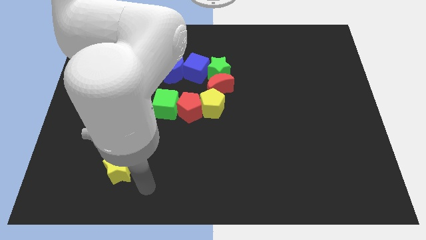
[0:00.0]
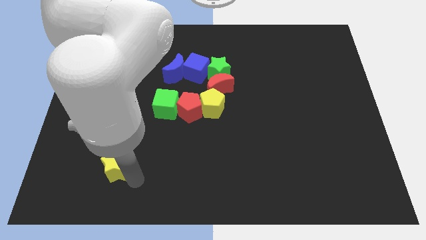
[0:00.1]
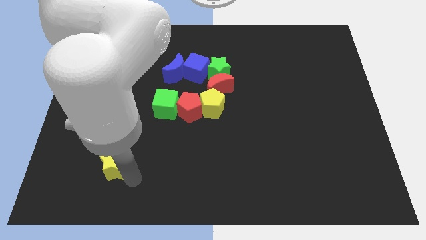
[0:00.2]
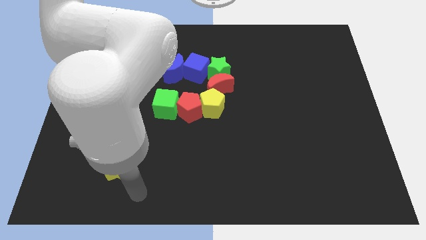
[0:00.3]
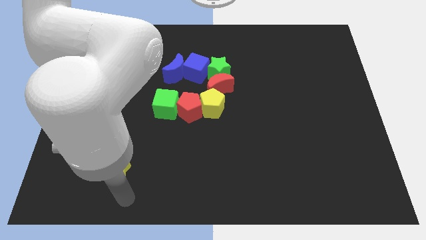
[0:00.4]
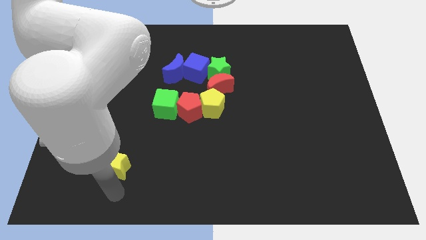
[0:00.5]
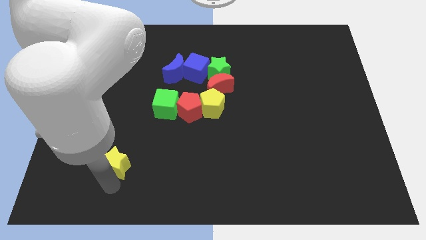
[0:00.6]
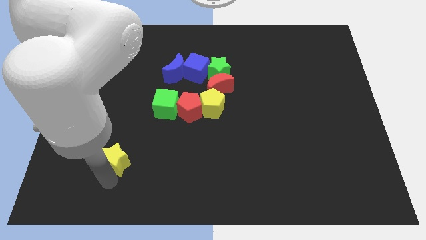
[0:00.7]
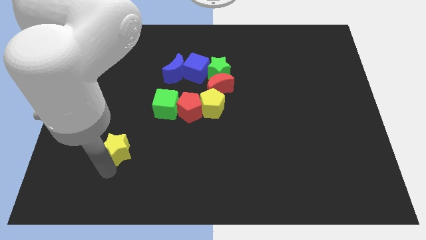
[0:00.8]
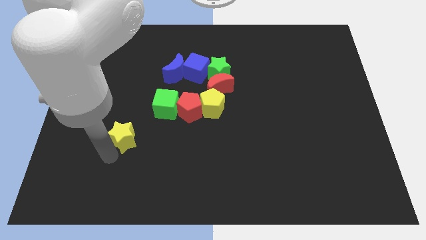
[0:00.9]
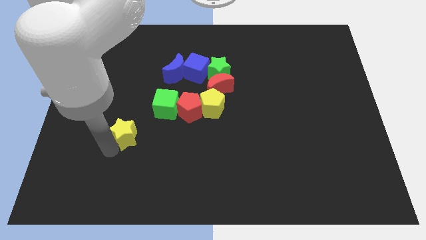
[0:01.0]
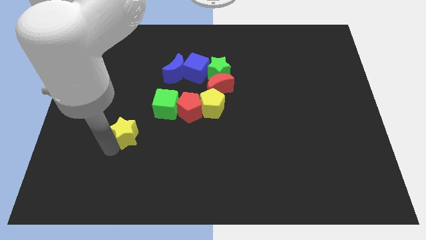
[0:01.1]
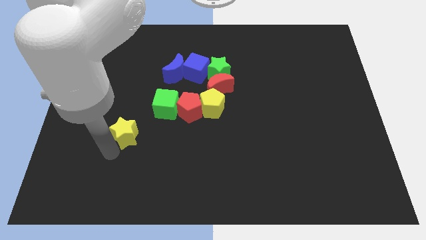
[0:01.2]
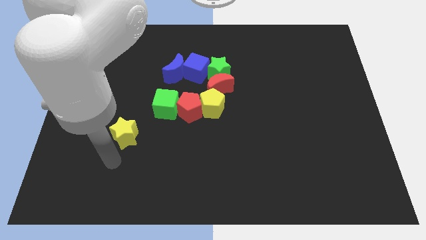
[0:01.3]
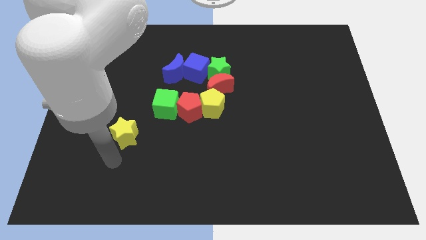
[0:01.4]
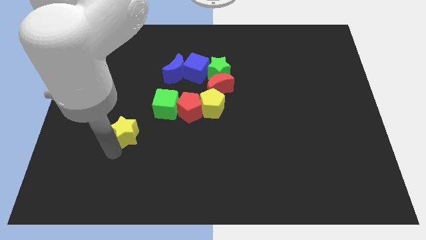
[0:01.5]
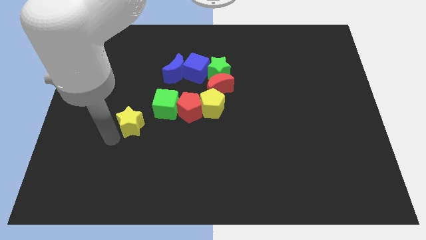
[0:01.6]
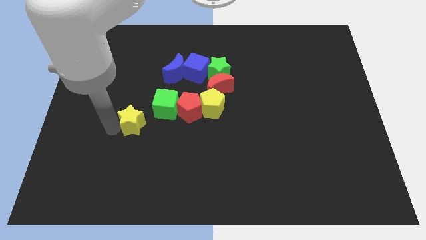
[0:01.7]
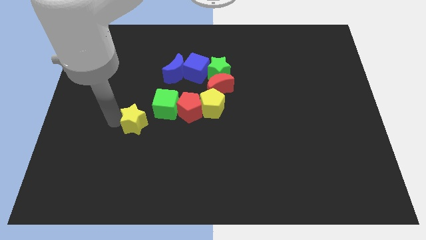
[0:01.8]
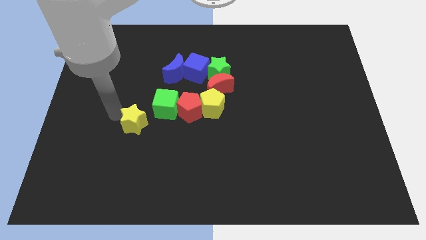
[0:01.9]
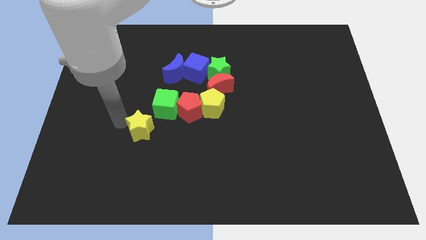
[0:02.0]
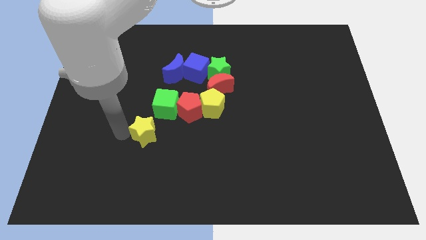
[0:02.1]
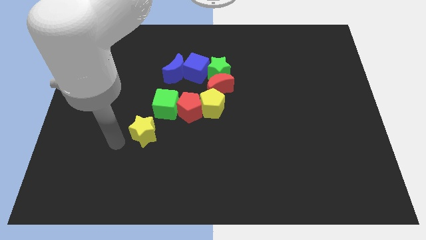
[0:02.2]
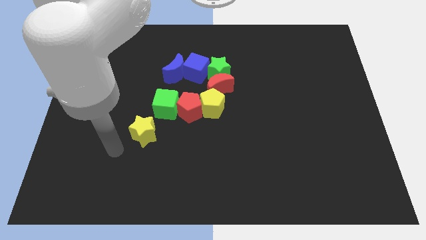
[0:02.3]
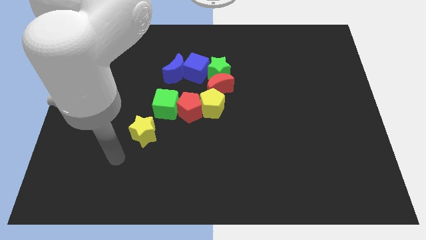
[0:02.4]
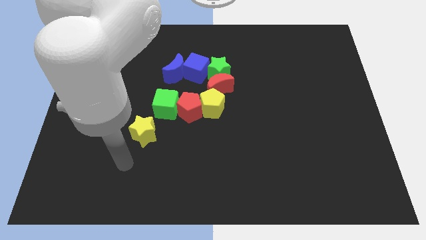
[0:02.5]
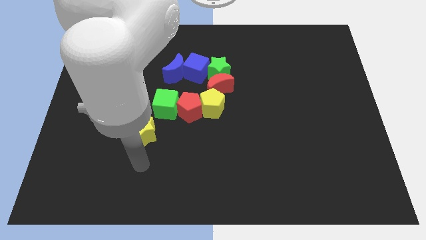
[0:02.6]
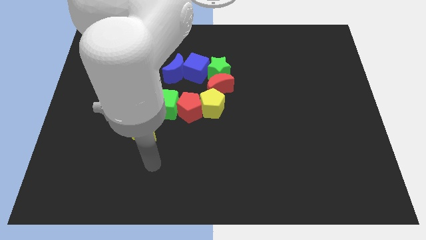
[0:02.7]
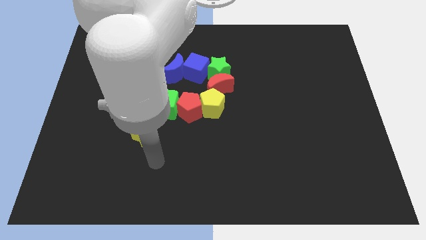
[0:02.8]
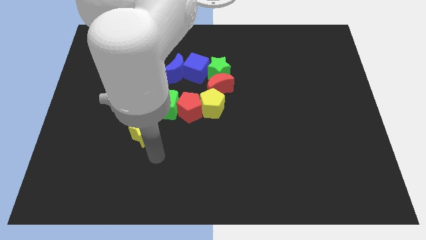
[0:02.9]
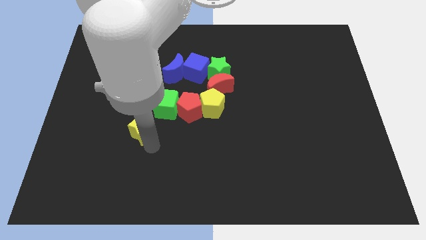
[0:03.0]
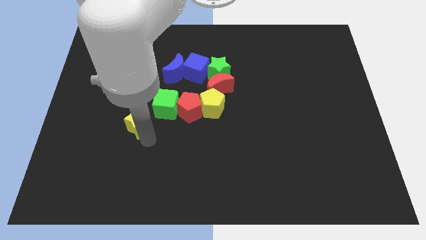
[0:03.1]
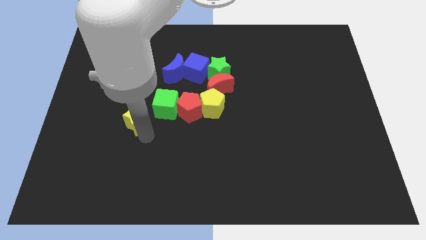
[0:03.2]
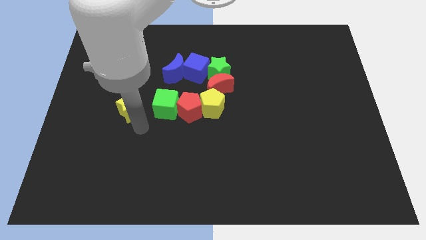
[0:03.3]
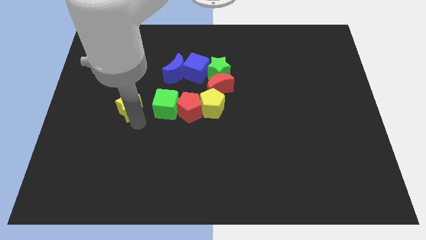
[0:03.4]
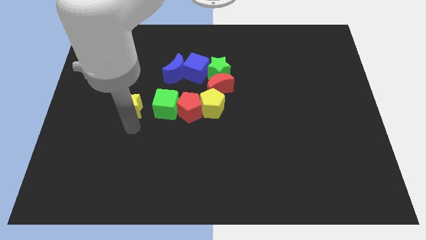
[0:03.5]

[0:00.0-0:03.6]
place the yellow star to the left side of the green cube

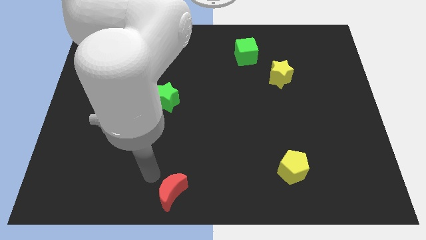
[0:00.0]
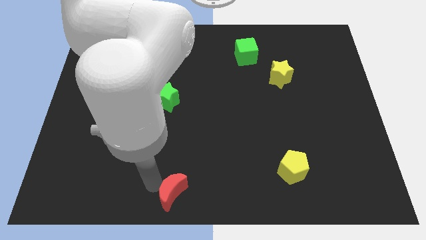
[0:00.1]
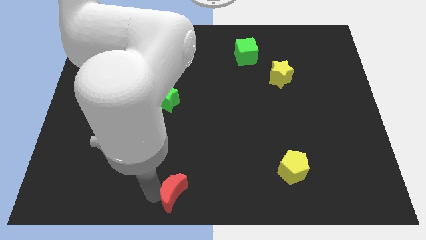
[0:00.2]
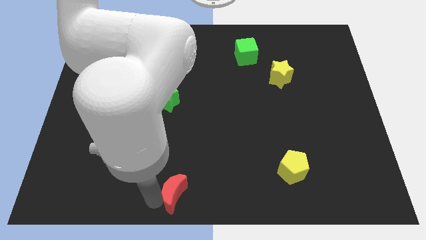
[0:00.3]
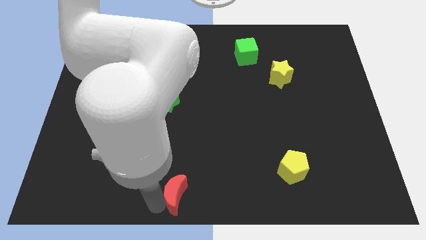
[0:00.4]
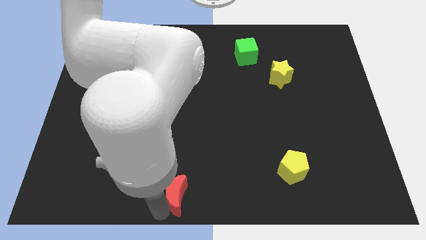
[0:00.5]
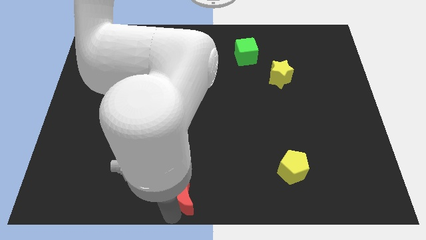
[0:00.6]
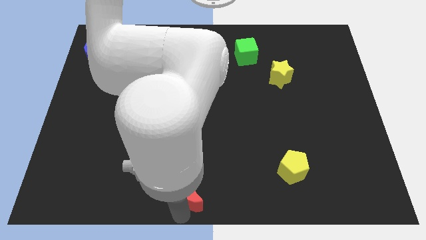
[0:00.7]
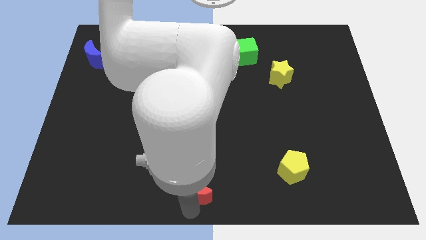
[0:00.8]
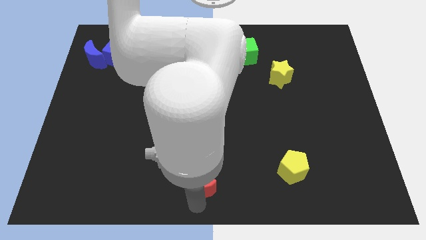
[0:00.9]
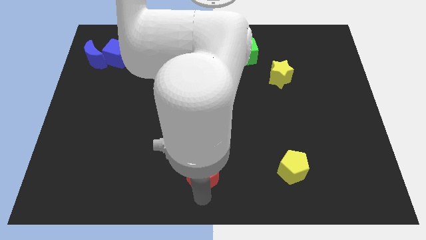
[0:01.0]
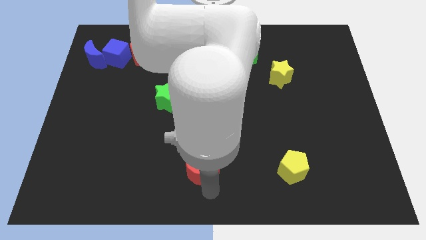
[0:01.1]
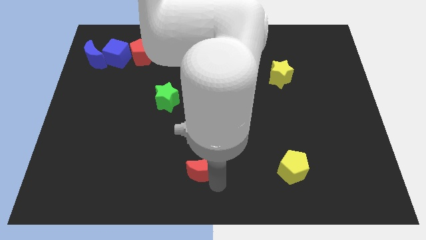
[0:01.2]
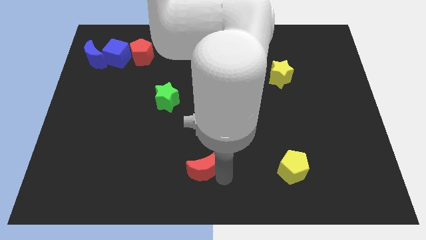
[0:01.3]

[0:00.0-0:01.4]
push the red moon horizontally to the right side of the yellow pentagon

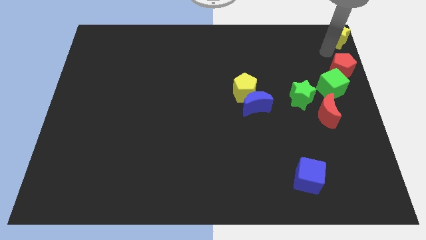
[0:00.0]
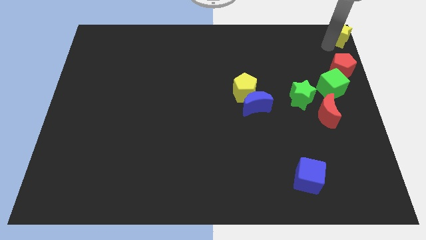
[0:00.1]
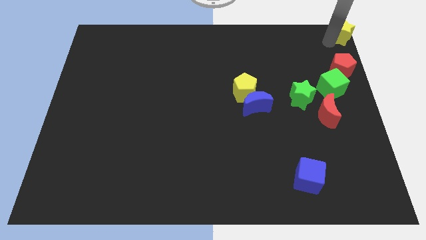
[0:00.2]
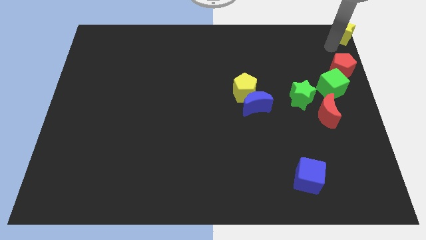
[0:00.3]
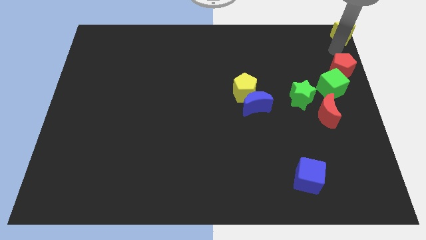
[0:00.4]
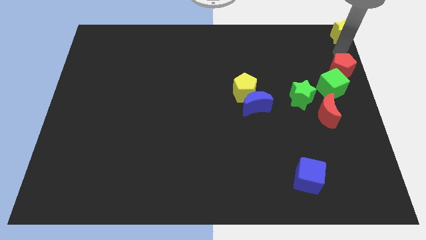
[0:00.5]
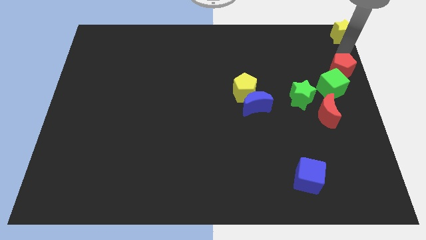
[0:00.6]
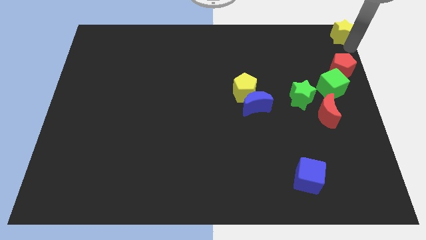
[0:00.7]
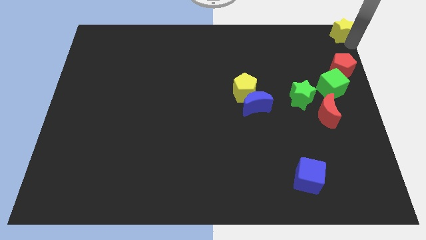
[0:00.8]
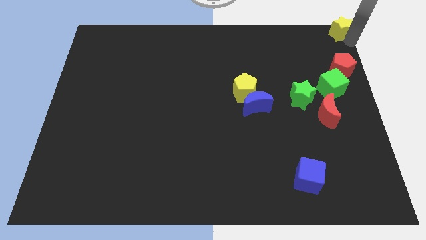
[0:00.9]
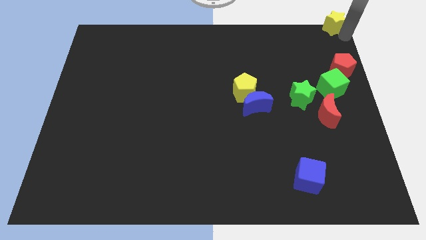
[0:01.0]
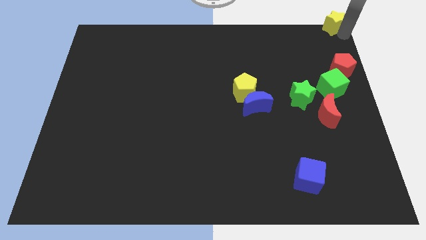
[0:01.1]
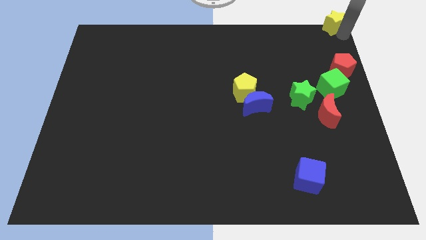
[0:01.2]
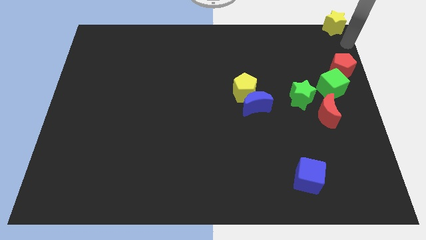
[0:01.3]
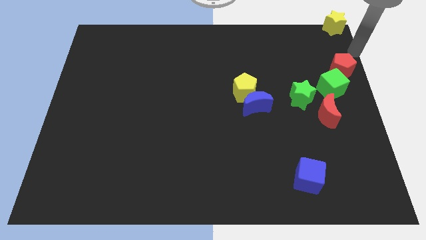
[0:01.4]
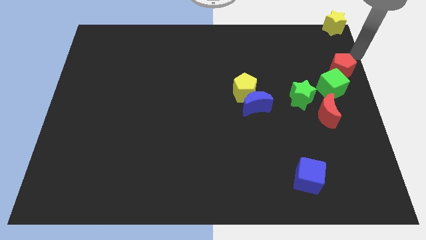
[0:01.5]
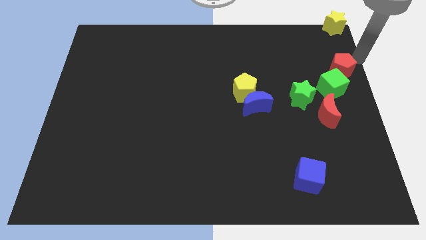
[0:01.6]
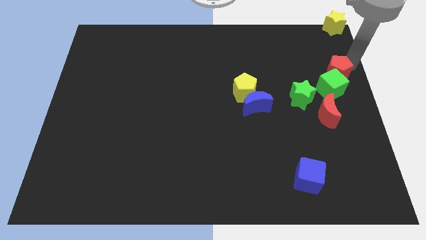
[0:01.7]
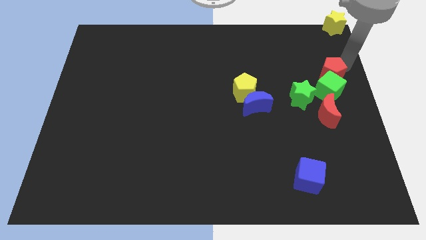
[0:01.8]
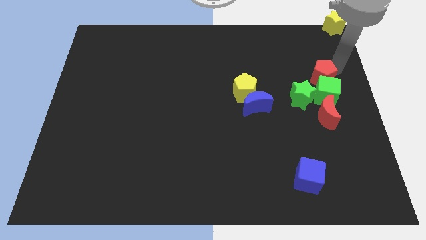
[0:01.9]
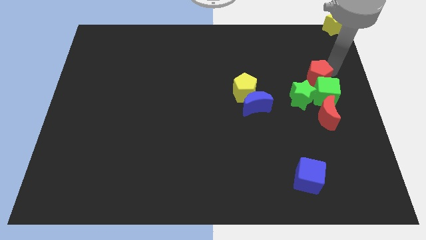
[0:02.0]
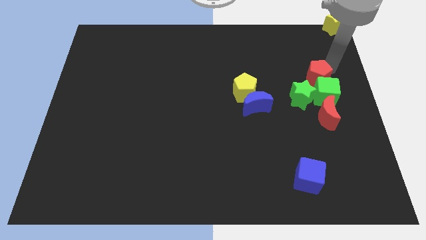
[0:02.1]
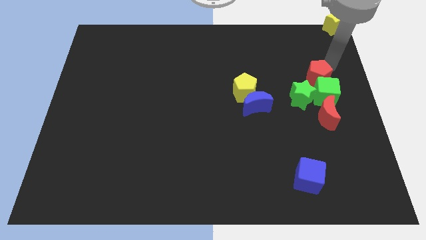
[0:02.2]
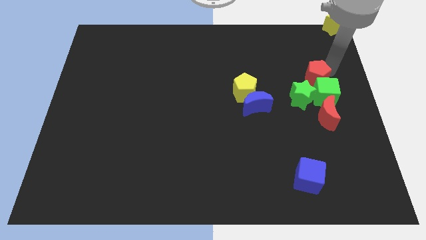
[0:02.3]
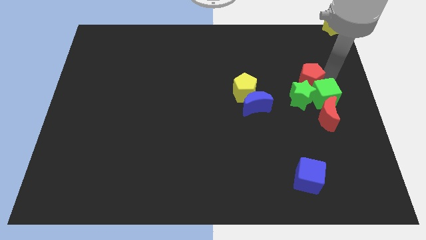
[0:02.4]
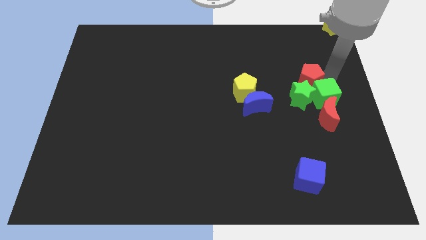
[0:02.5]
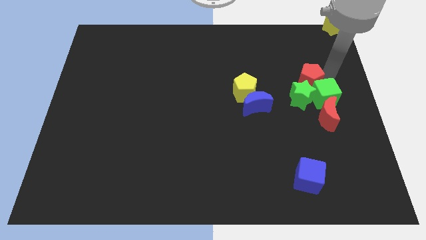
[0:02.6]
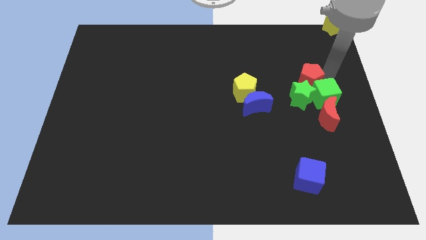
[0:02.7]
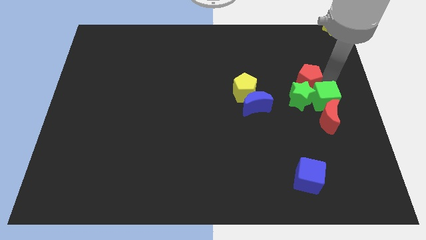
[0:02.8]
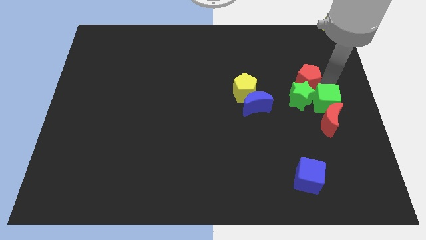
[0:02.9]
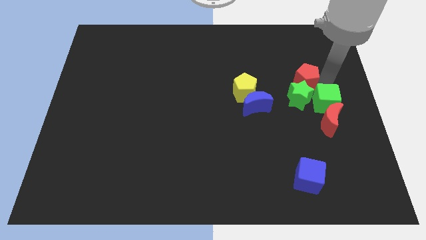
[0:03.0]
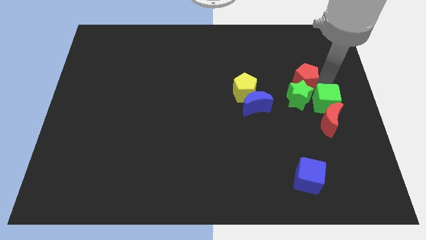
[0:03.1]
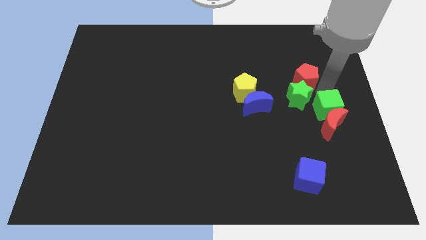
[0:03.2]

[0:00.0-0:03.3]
push red pentagon above green star

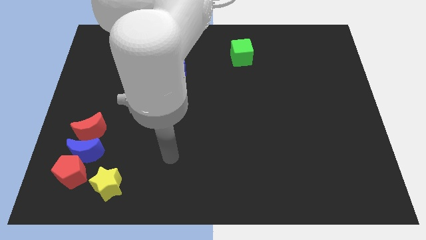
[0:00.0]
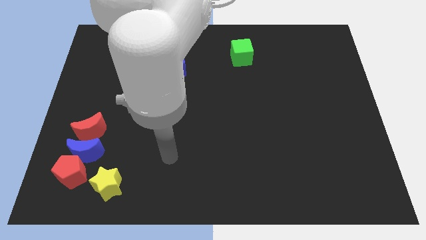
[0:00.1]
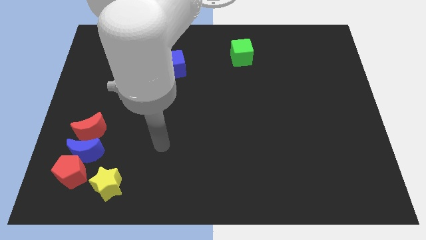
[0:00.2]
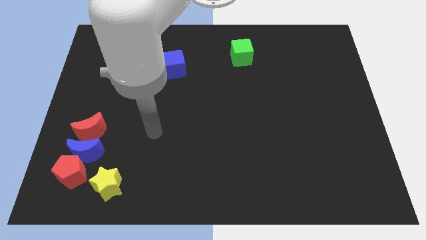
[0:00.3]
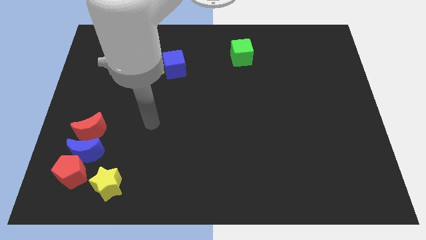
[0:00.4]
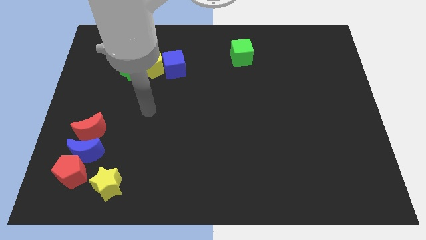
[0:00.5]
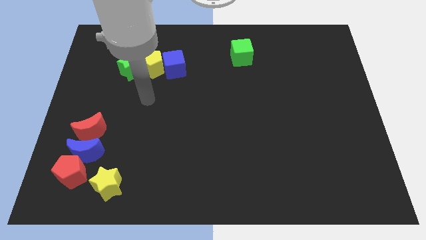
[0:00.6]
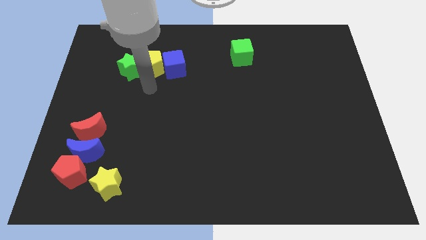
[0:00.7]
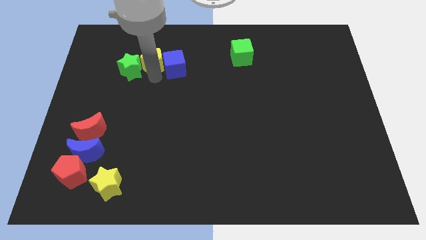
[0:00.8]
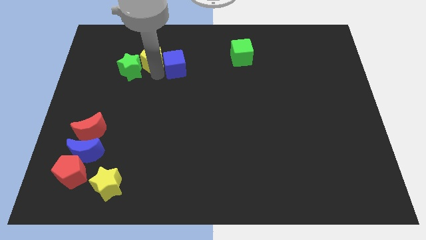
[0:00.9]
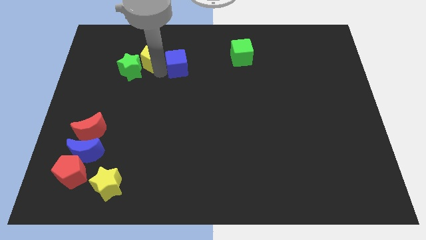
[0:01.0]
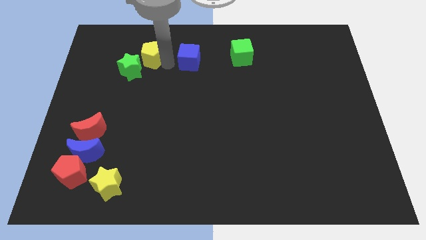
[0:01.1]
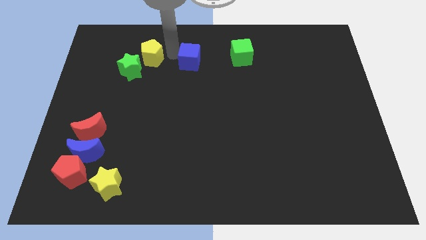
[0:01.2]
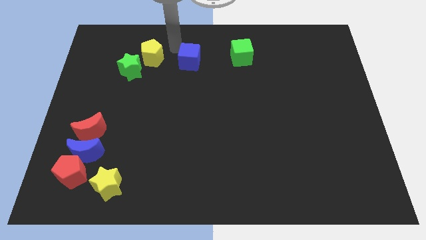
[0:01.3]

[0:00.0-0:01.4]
separate the yellow pentagon and the blue cube
